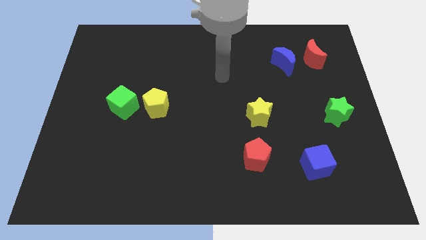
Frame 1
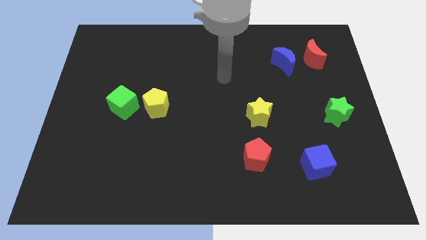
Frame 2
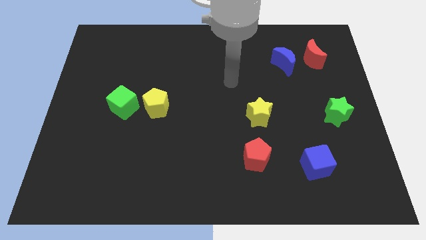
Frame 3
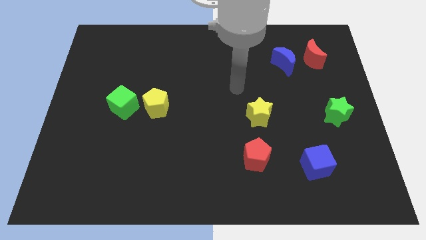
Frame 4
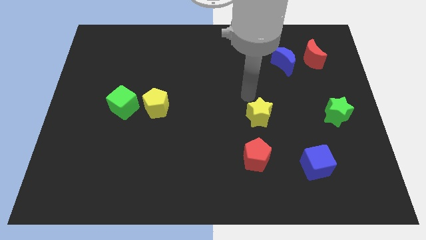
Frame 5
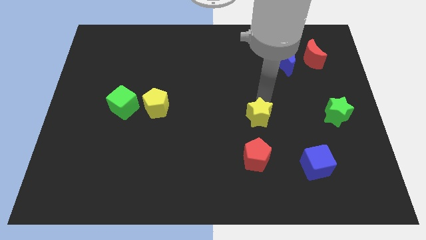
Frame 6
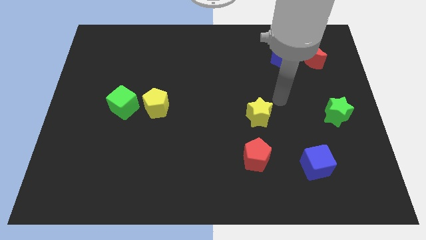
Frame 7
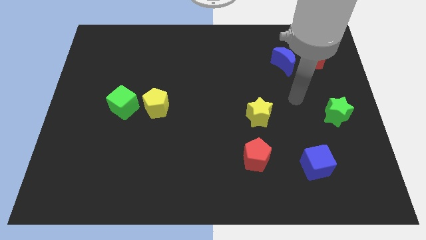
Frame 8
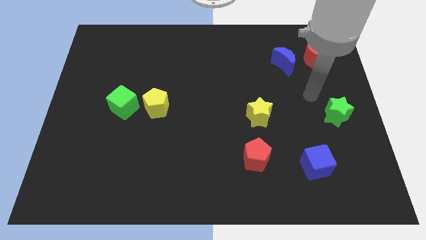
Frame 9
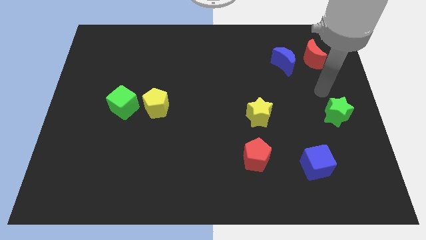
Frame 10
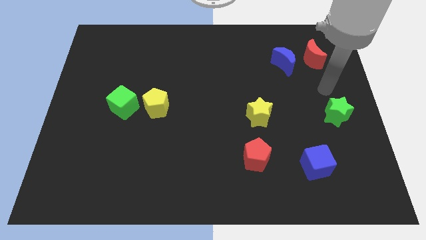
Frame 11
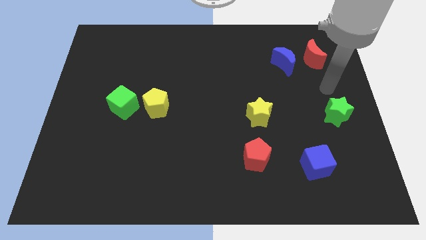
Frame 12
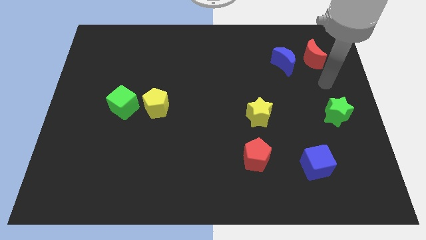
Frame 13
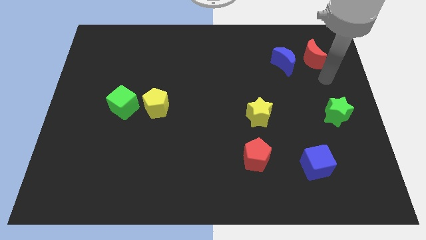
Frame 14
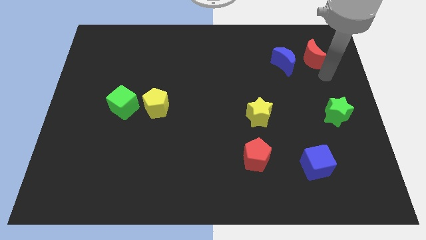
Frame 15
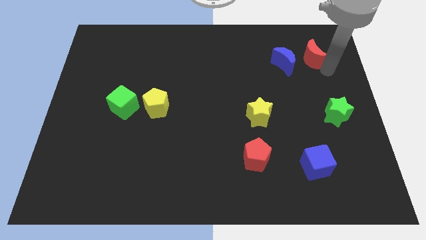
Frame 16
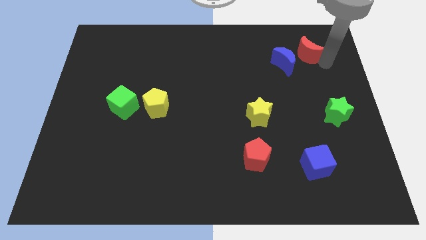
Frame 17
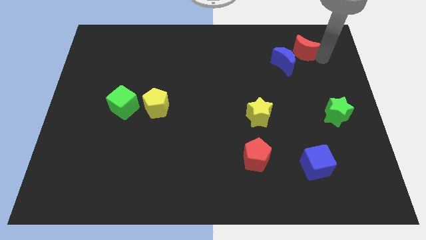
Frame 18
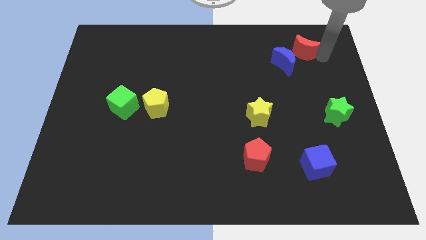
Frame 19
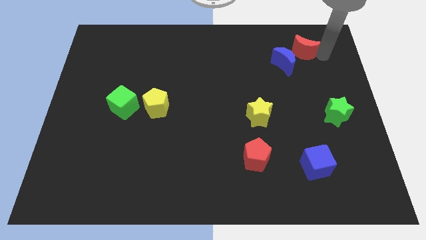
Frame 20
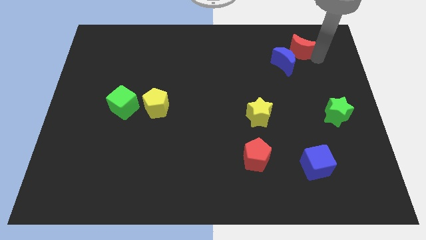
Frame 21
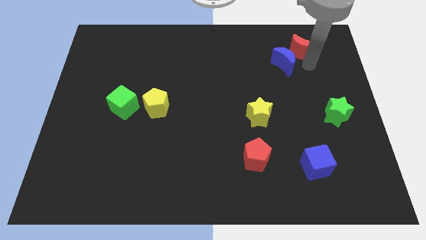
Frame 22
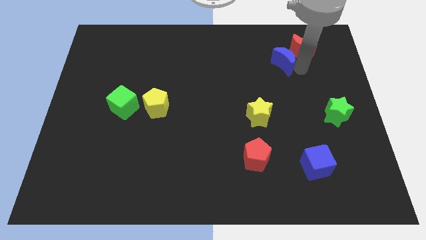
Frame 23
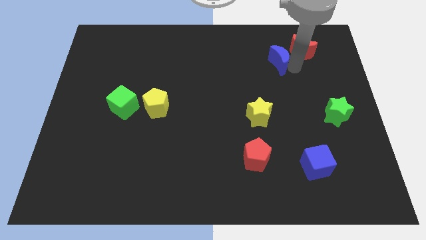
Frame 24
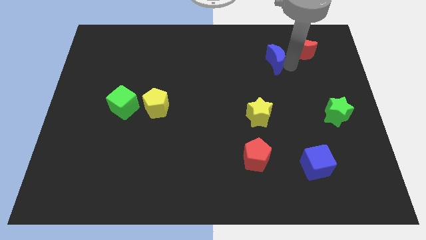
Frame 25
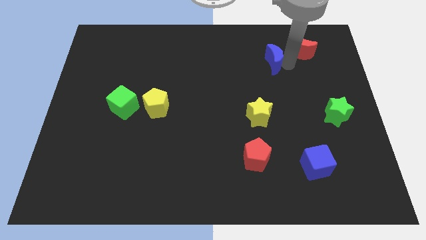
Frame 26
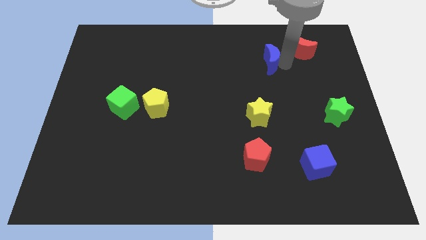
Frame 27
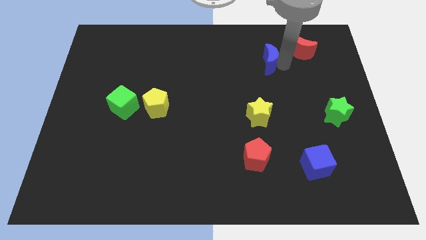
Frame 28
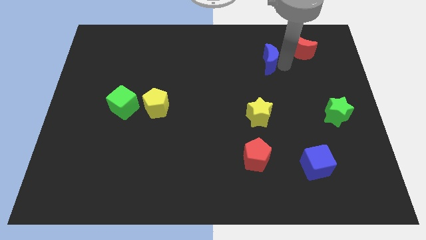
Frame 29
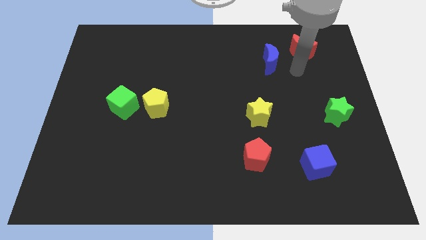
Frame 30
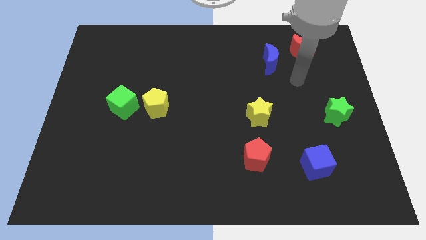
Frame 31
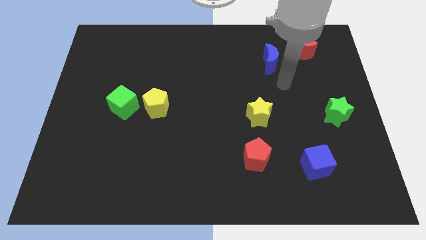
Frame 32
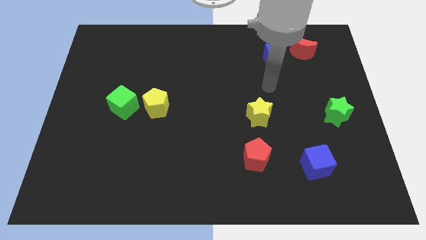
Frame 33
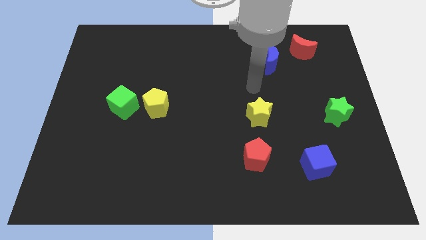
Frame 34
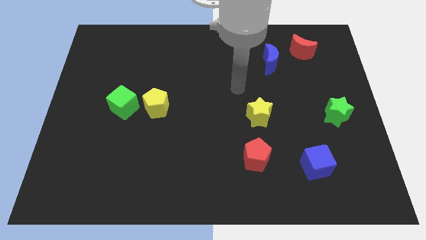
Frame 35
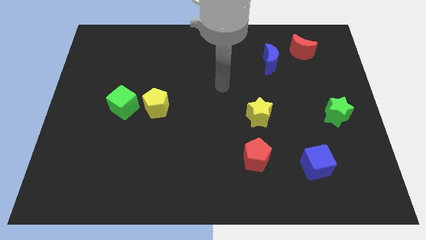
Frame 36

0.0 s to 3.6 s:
slightly move blue moon to the left

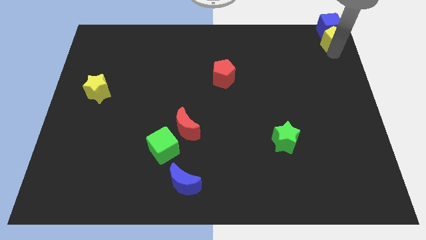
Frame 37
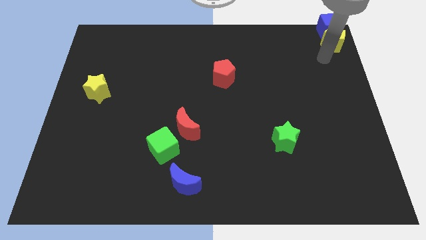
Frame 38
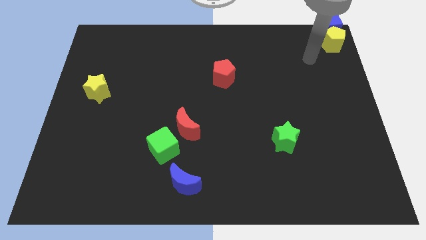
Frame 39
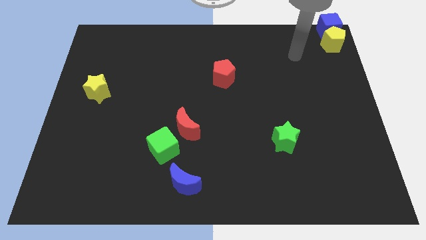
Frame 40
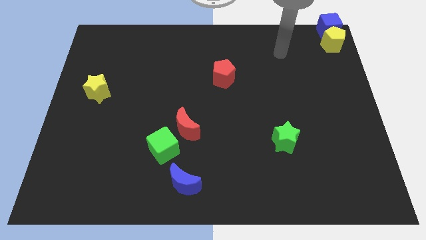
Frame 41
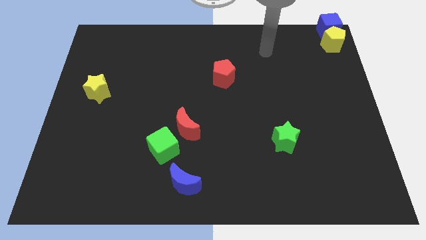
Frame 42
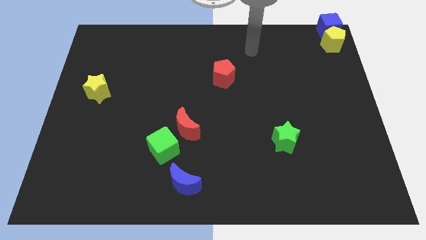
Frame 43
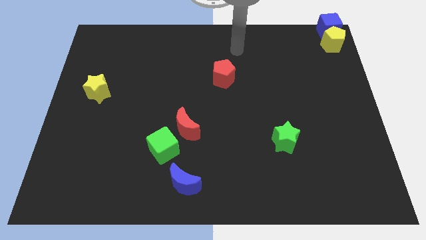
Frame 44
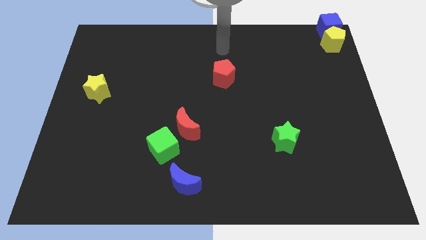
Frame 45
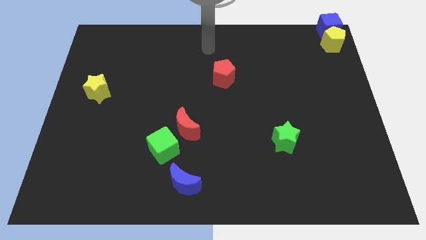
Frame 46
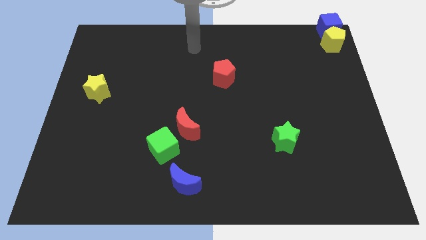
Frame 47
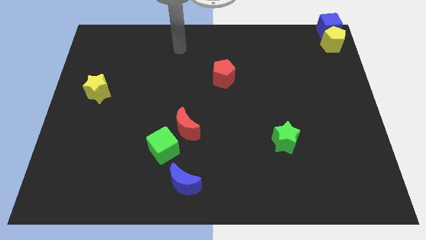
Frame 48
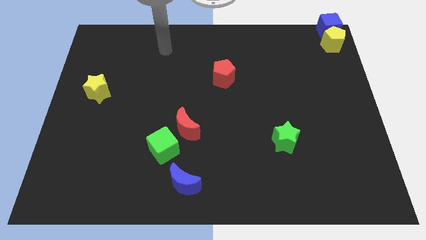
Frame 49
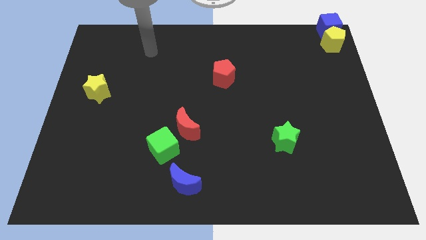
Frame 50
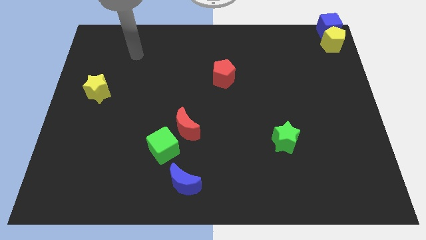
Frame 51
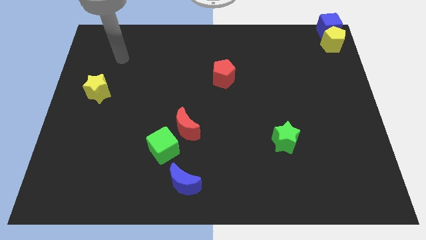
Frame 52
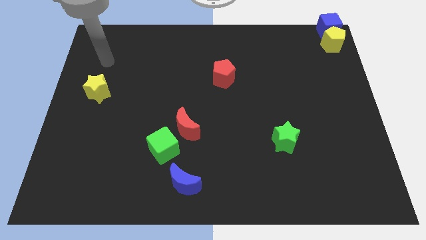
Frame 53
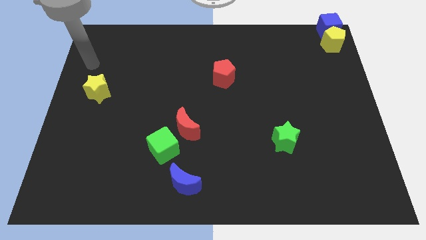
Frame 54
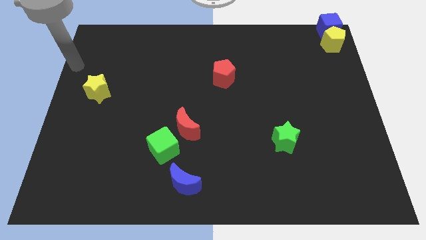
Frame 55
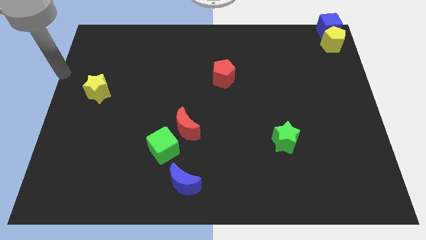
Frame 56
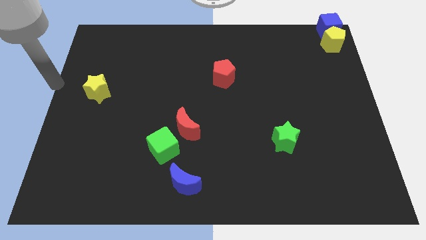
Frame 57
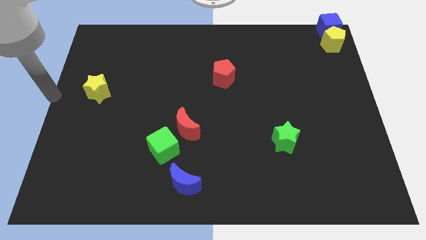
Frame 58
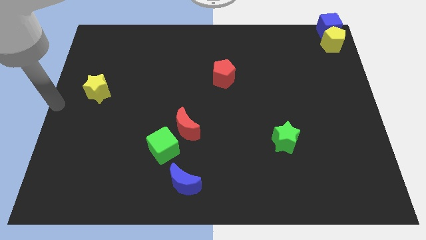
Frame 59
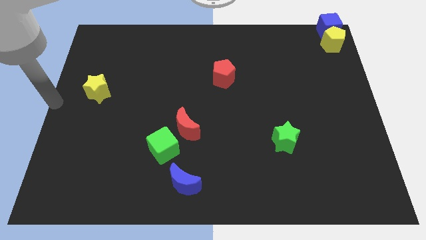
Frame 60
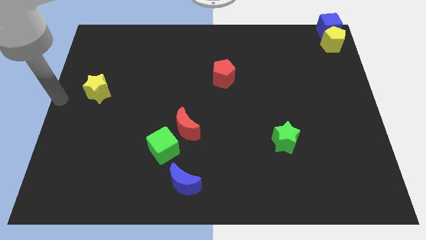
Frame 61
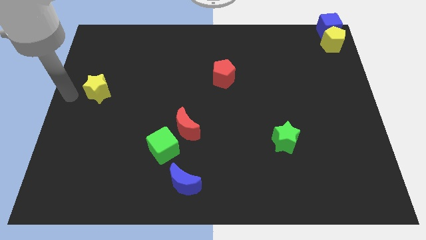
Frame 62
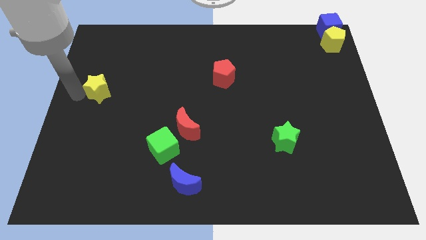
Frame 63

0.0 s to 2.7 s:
point the arm to the left of the yellow star

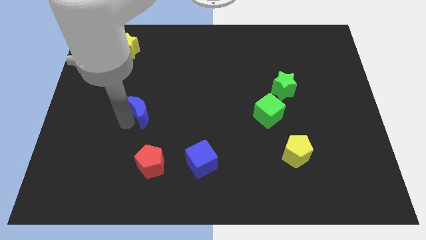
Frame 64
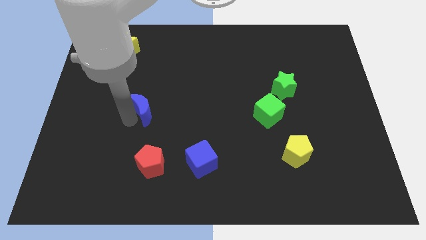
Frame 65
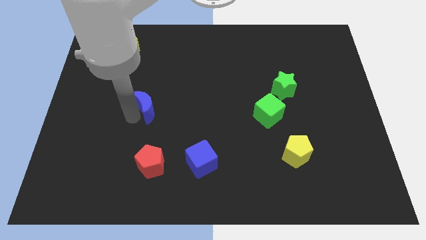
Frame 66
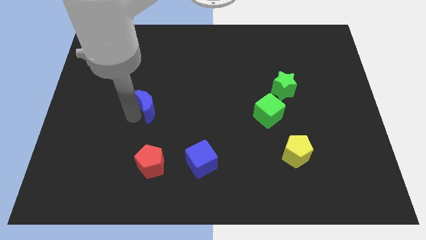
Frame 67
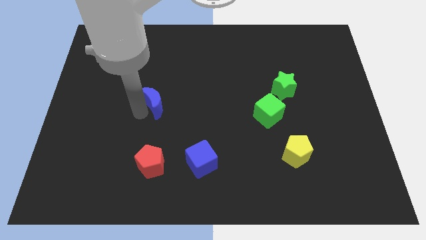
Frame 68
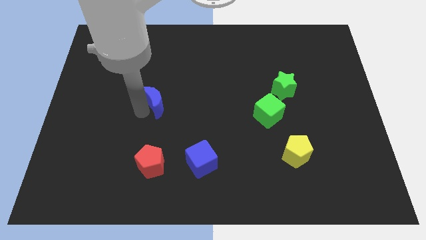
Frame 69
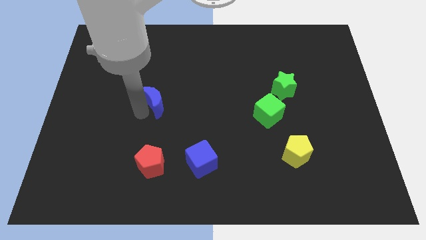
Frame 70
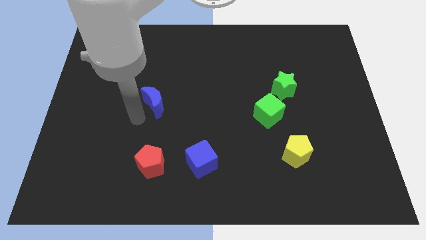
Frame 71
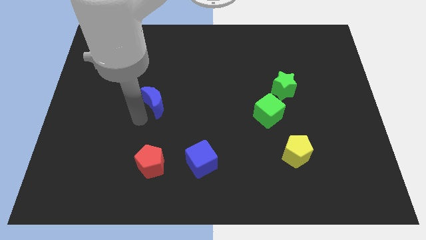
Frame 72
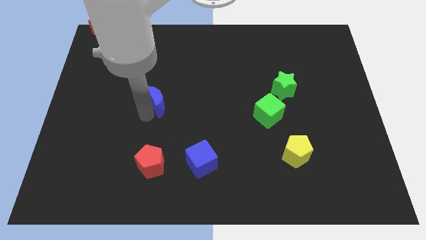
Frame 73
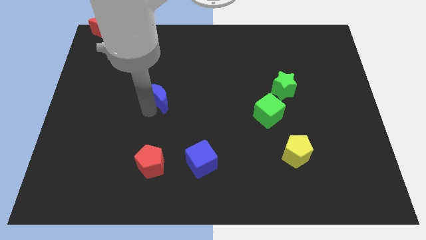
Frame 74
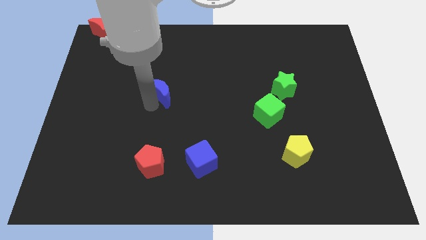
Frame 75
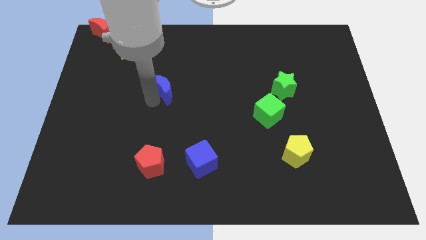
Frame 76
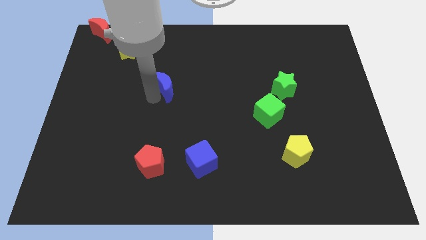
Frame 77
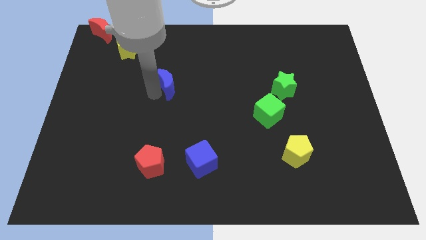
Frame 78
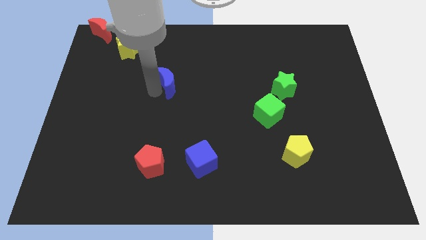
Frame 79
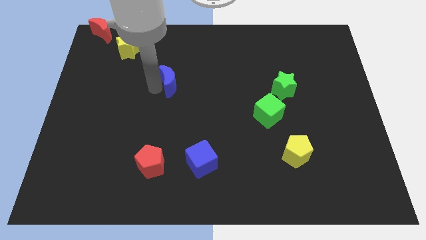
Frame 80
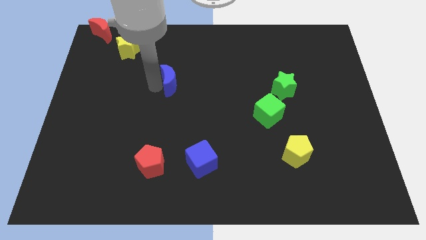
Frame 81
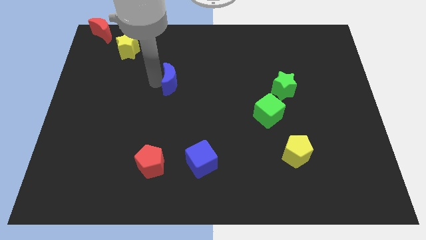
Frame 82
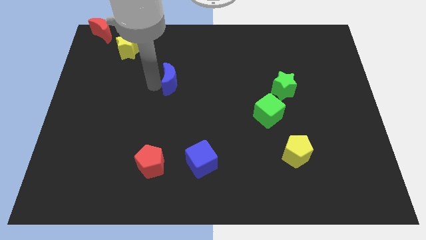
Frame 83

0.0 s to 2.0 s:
place blue crescent above blue cube

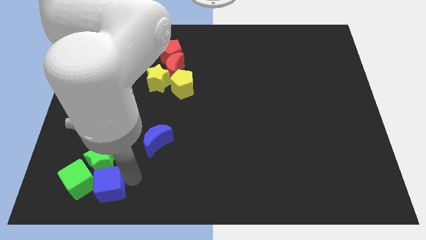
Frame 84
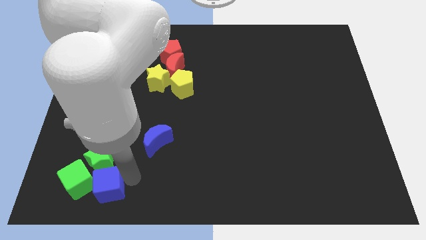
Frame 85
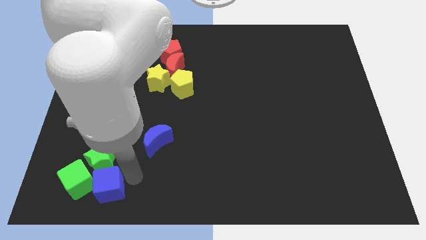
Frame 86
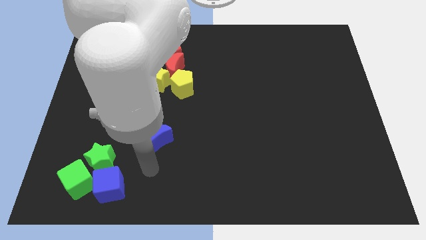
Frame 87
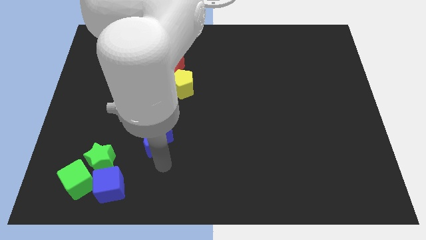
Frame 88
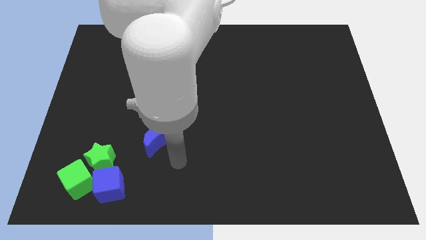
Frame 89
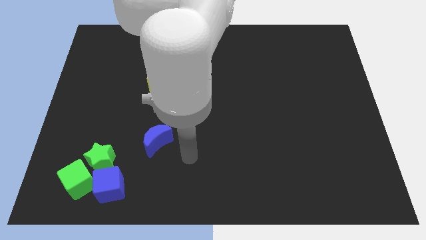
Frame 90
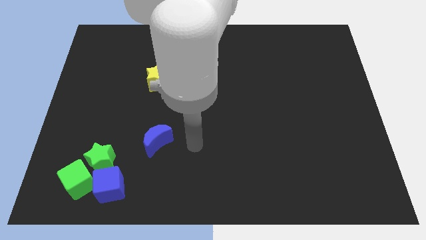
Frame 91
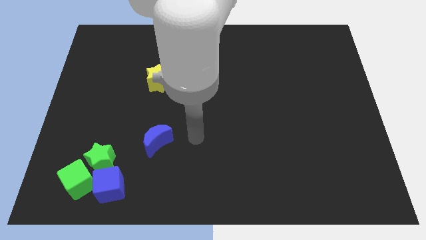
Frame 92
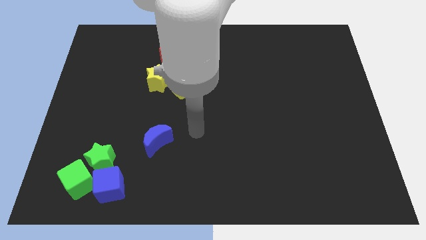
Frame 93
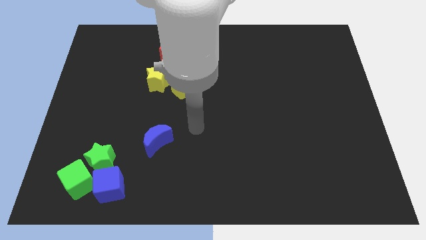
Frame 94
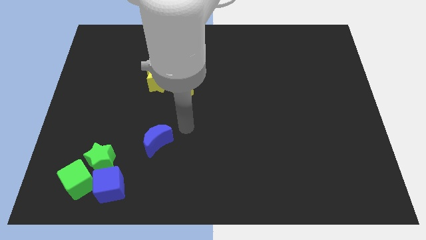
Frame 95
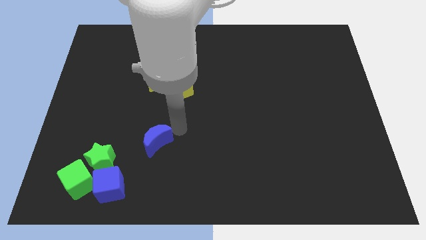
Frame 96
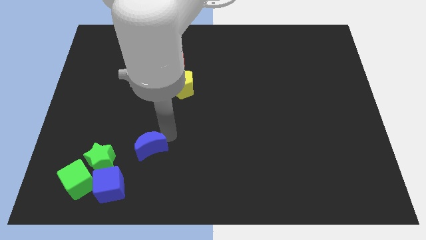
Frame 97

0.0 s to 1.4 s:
move your arm close to the blue crescent
